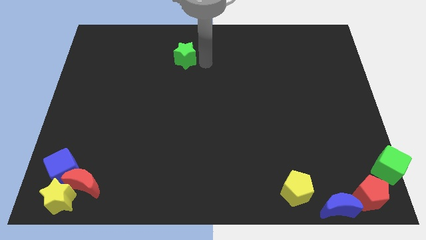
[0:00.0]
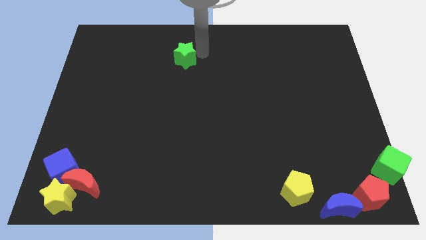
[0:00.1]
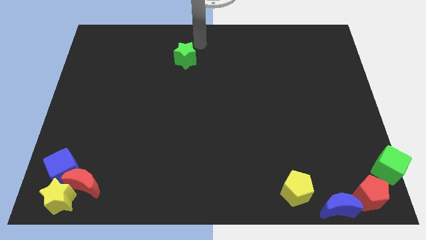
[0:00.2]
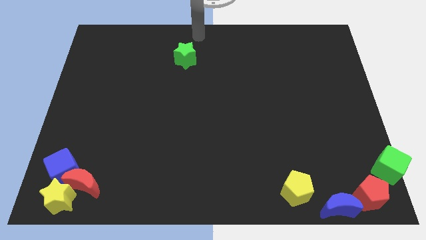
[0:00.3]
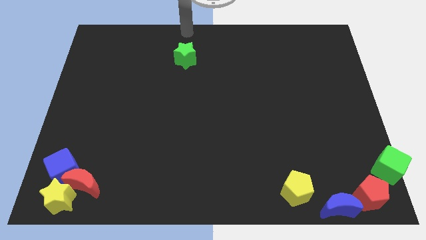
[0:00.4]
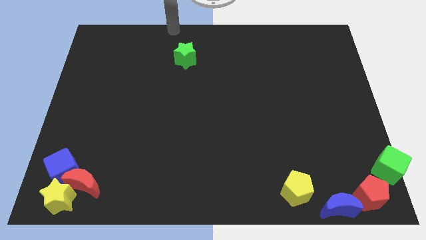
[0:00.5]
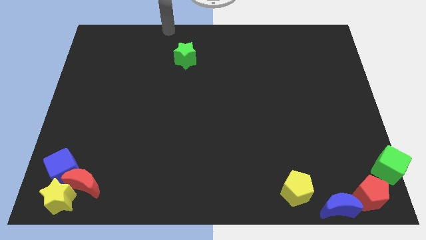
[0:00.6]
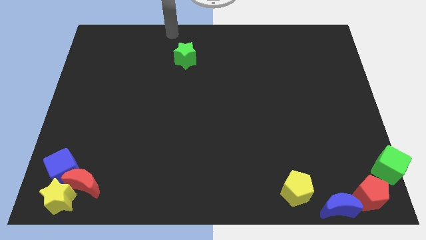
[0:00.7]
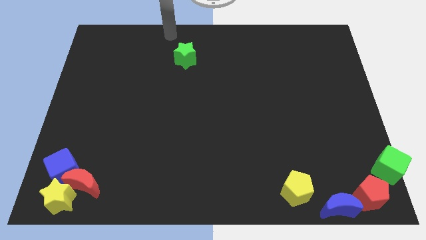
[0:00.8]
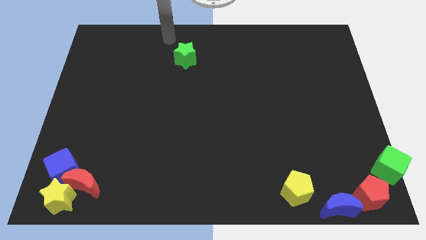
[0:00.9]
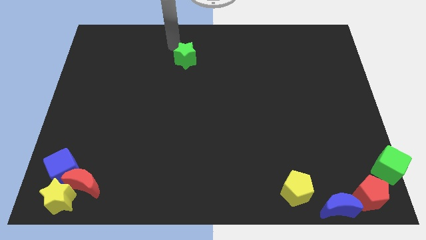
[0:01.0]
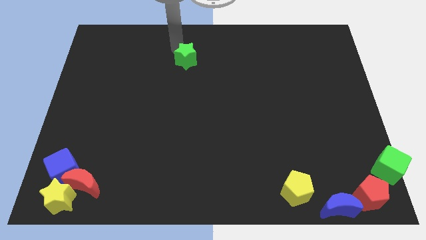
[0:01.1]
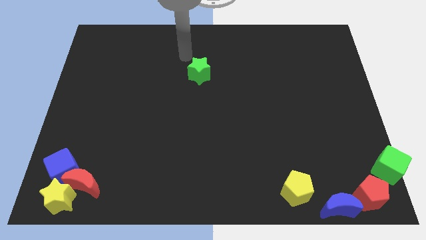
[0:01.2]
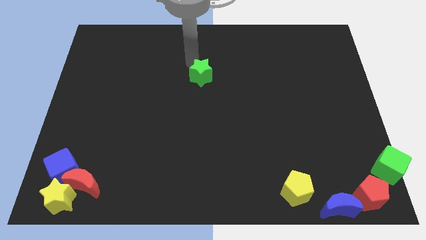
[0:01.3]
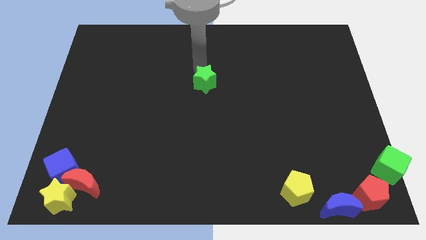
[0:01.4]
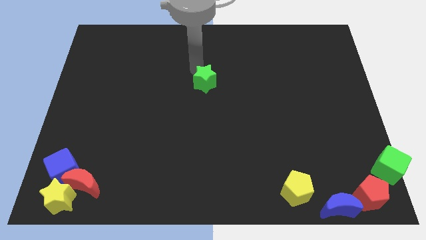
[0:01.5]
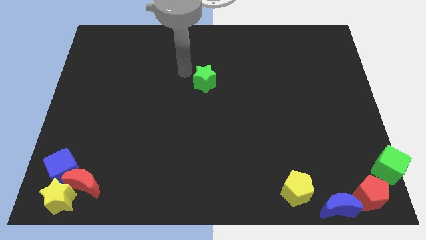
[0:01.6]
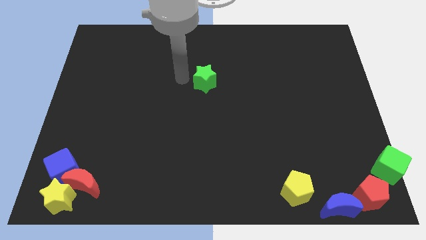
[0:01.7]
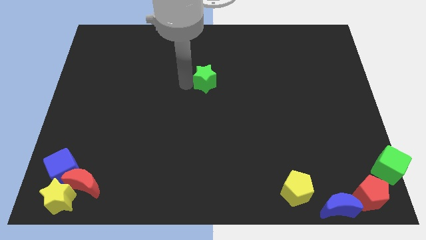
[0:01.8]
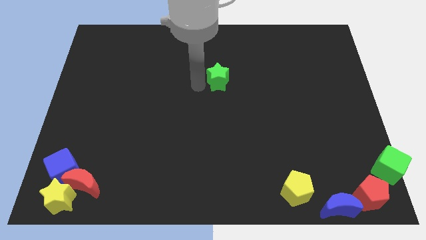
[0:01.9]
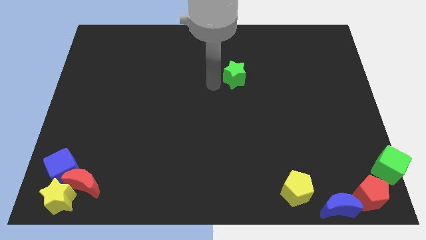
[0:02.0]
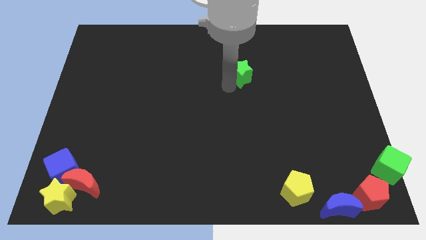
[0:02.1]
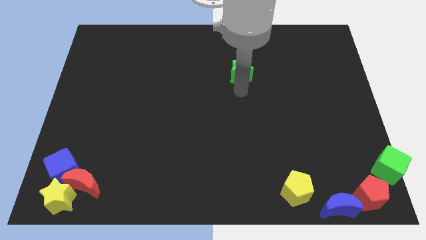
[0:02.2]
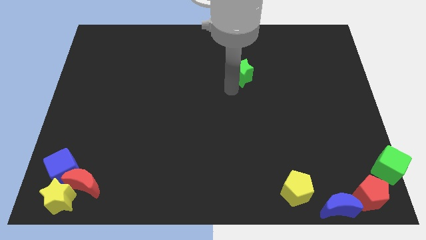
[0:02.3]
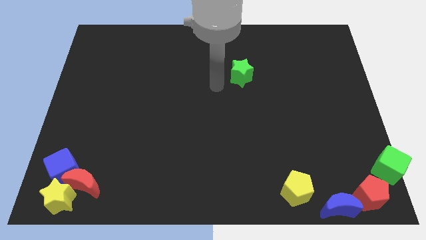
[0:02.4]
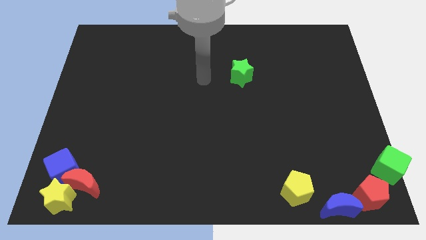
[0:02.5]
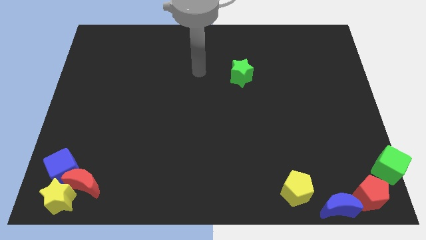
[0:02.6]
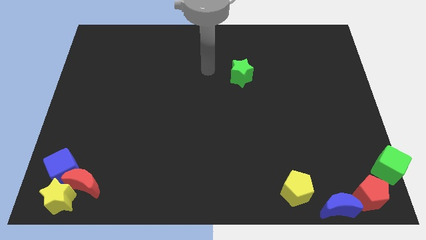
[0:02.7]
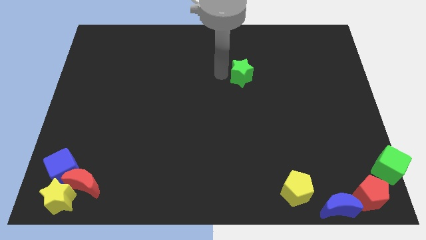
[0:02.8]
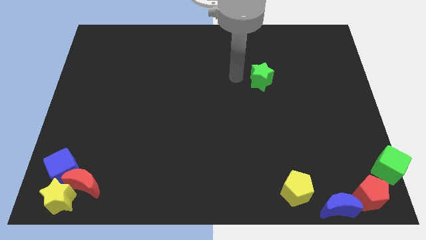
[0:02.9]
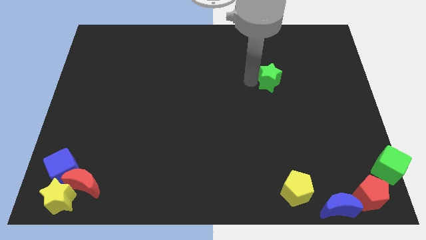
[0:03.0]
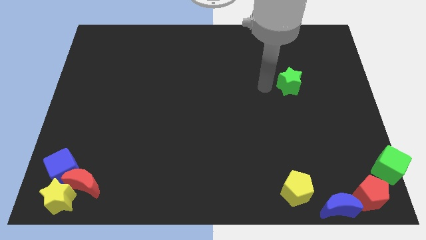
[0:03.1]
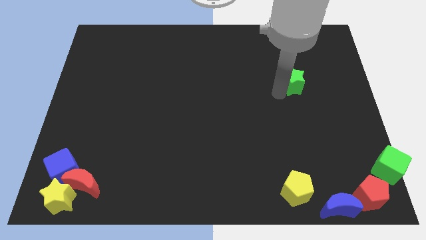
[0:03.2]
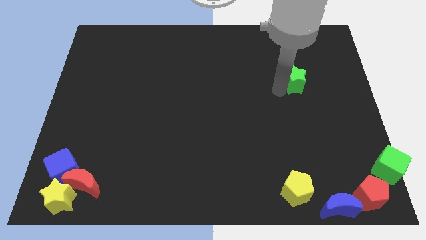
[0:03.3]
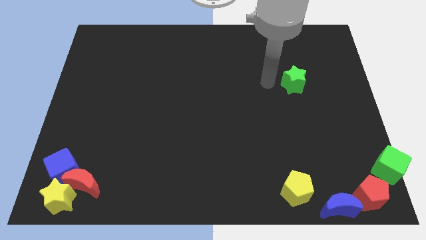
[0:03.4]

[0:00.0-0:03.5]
slide the green star vertically on the top side of the yellow pentagon

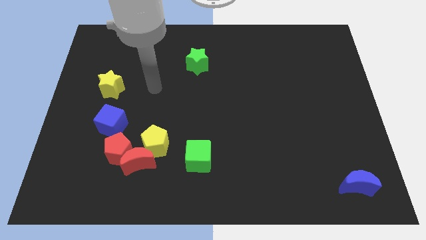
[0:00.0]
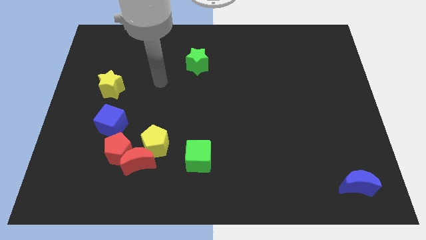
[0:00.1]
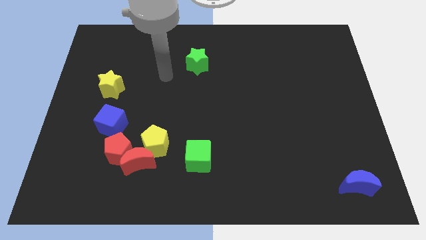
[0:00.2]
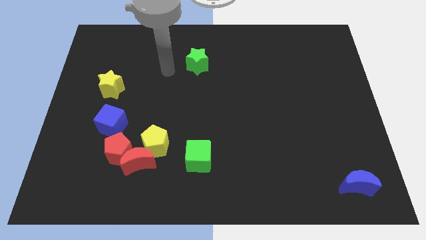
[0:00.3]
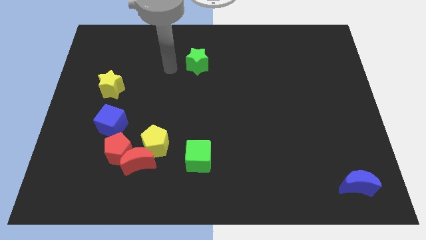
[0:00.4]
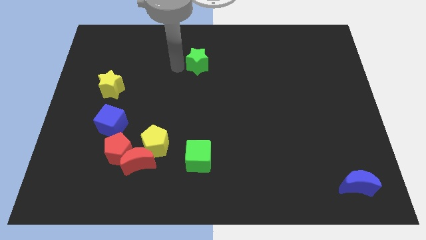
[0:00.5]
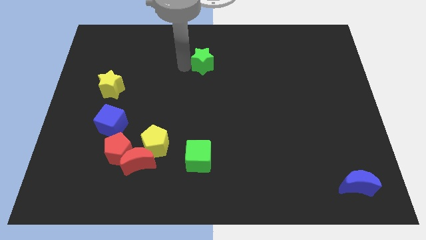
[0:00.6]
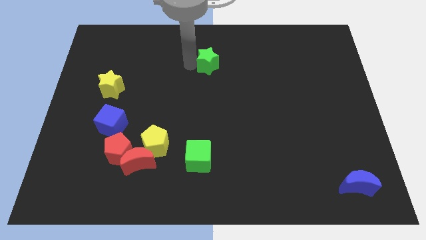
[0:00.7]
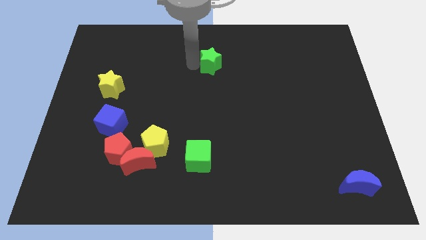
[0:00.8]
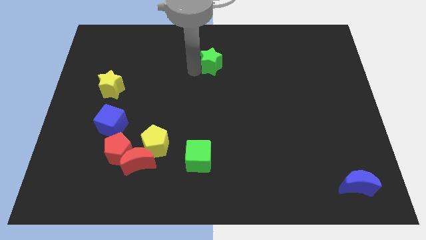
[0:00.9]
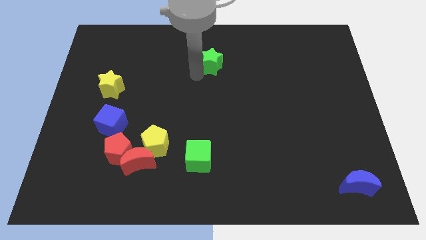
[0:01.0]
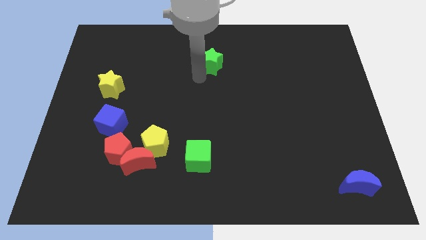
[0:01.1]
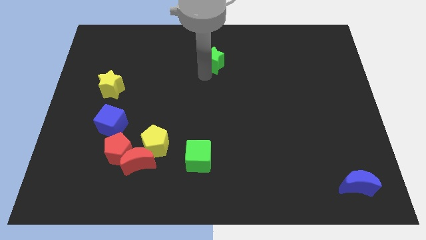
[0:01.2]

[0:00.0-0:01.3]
move the green star slightly to the right

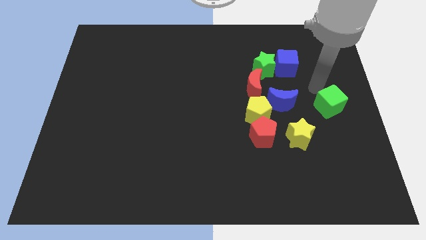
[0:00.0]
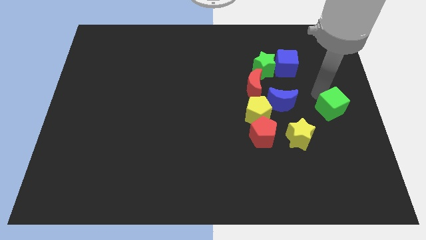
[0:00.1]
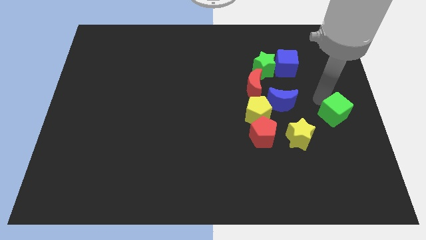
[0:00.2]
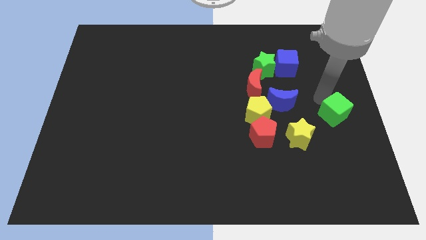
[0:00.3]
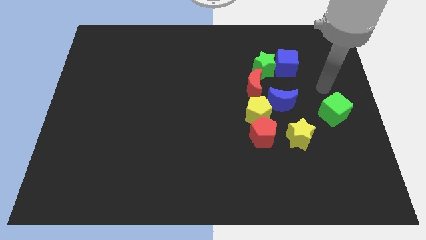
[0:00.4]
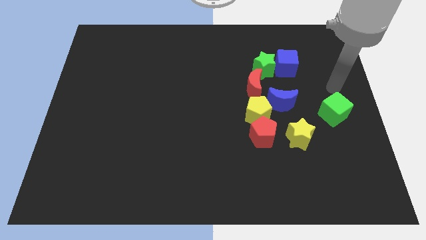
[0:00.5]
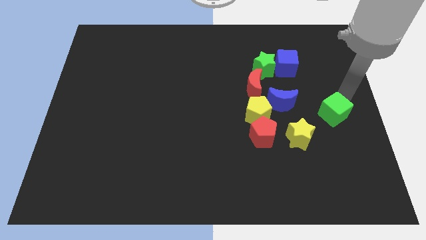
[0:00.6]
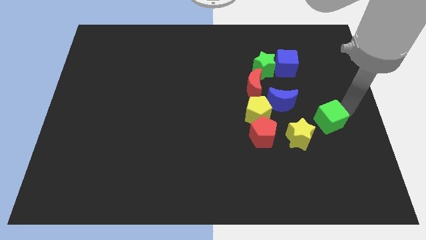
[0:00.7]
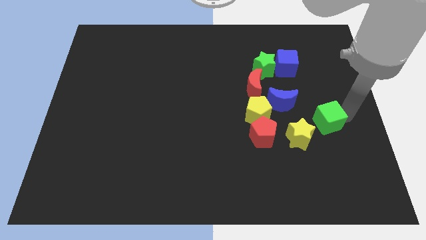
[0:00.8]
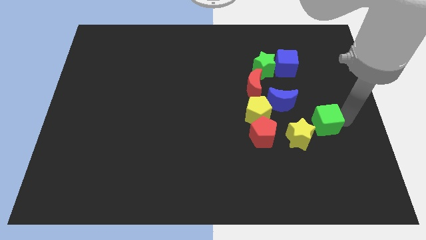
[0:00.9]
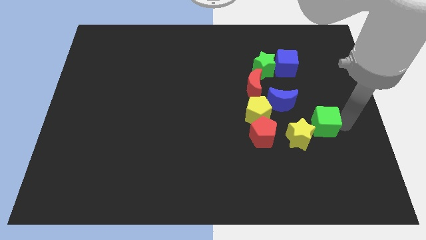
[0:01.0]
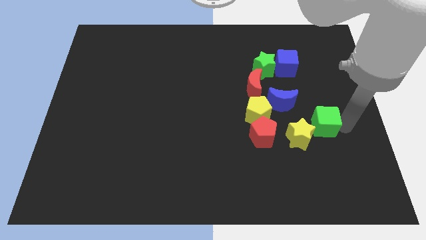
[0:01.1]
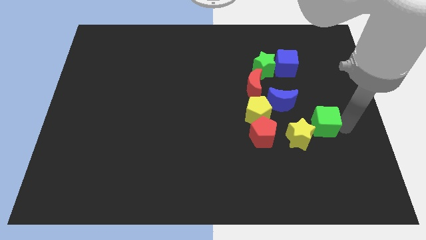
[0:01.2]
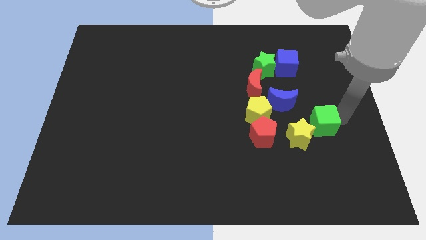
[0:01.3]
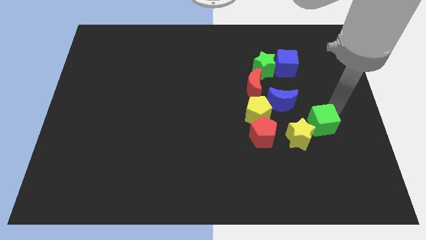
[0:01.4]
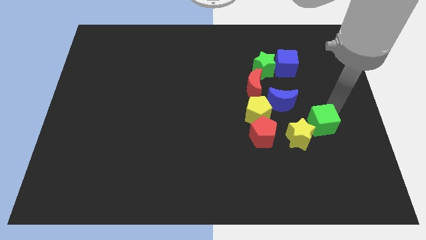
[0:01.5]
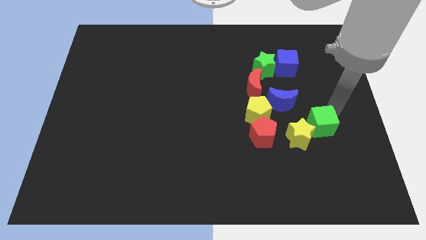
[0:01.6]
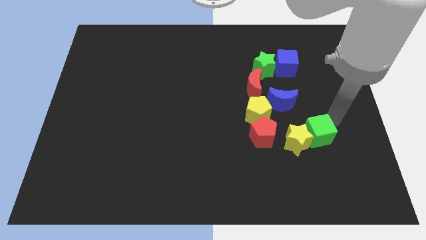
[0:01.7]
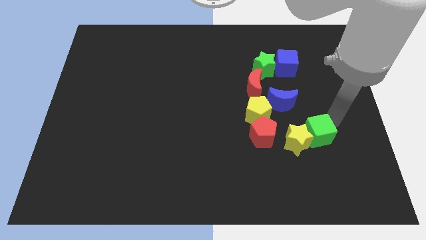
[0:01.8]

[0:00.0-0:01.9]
move green cube into the yellow star

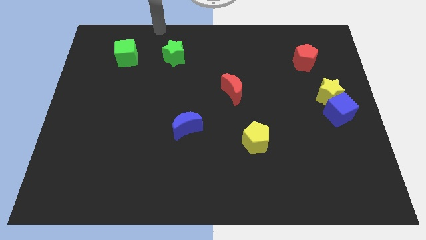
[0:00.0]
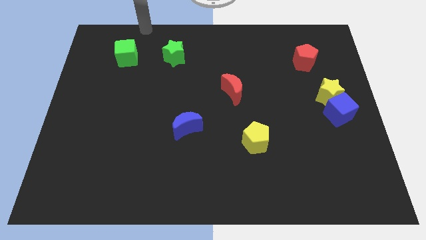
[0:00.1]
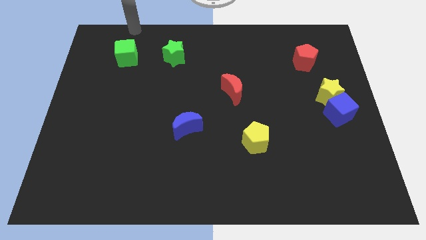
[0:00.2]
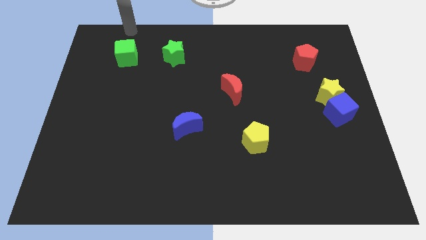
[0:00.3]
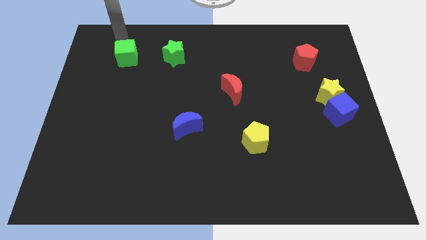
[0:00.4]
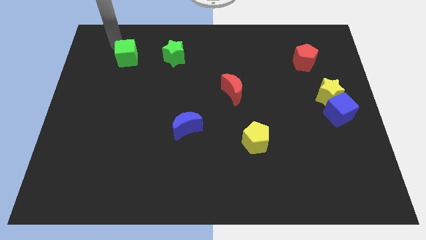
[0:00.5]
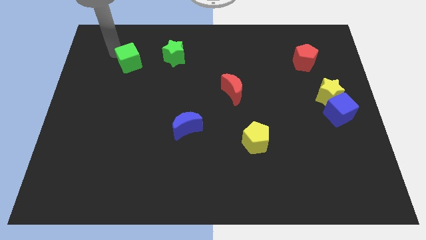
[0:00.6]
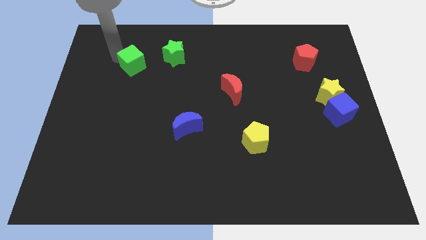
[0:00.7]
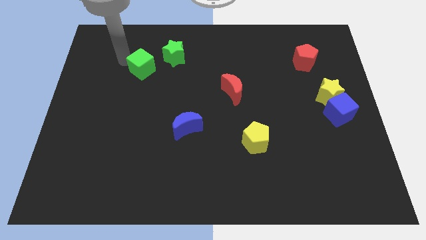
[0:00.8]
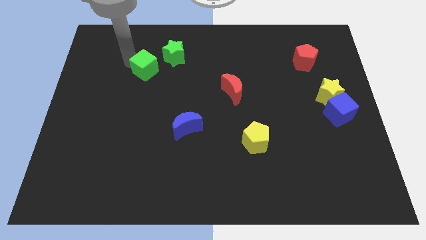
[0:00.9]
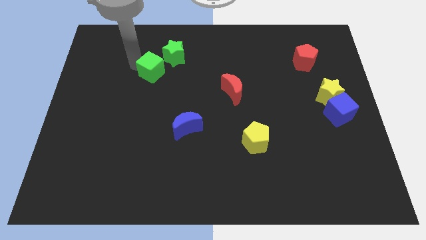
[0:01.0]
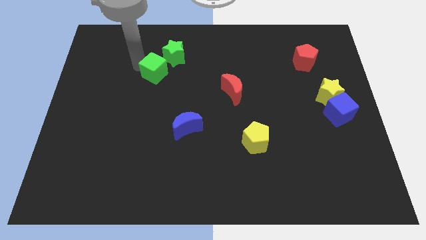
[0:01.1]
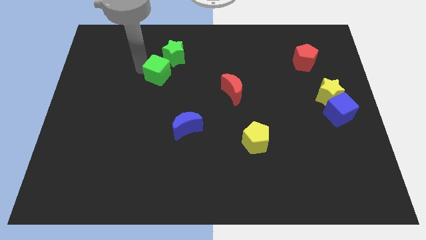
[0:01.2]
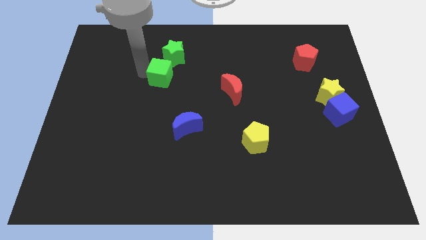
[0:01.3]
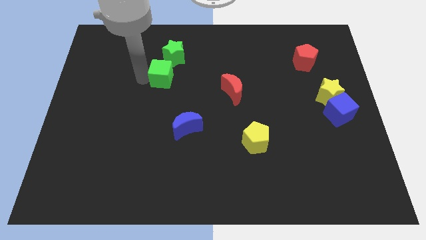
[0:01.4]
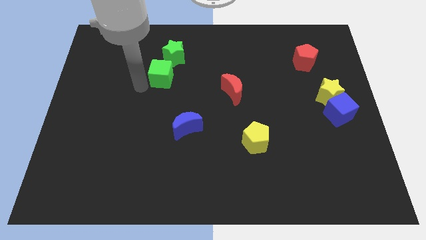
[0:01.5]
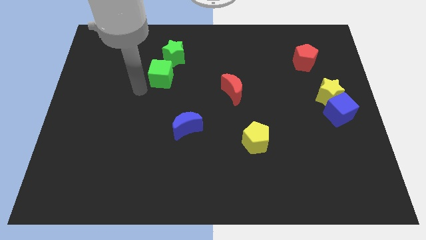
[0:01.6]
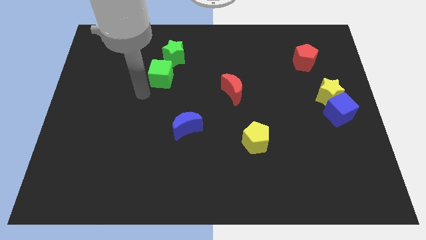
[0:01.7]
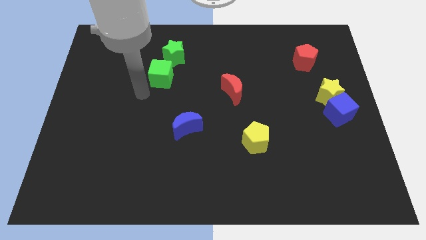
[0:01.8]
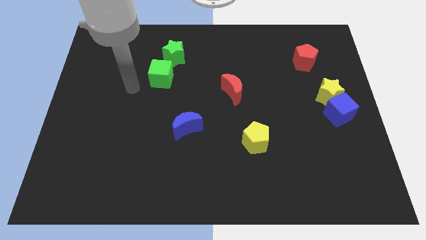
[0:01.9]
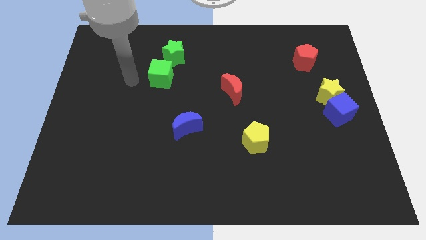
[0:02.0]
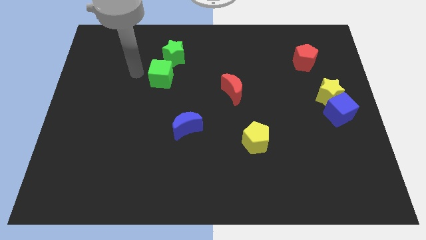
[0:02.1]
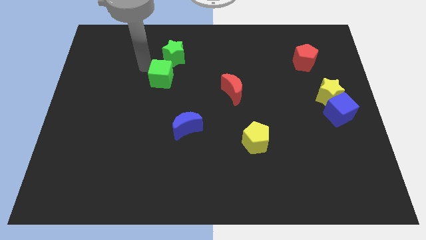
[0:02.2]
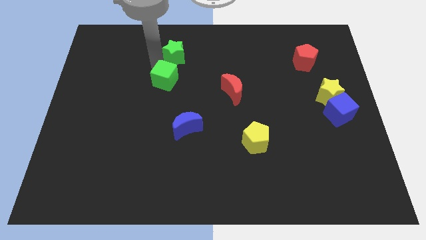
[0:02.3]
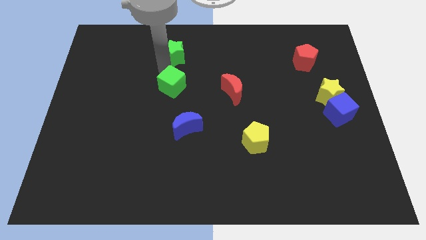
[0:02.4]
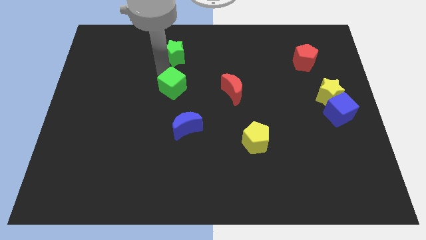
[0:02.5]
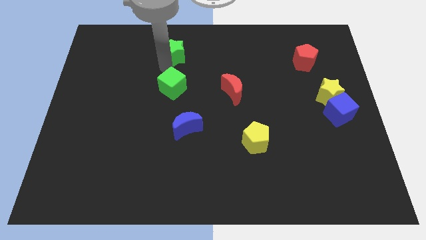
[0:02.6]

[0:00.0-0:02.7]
place the green cube in between the green star and blue moon
